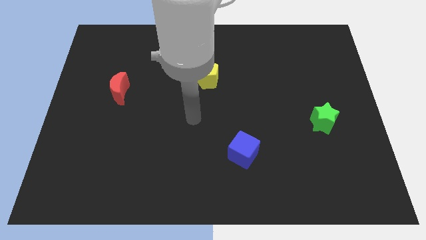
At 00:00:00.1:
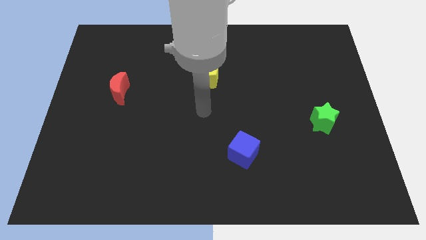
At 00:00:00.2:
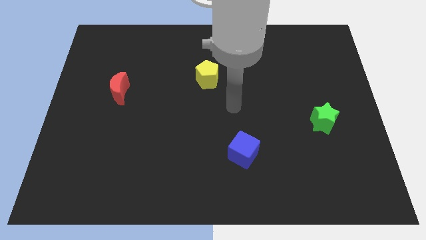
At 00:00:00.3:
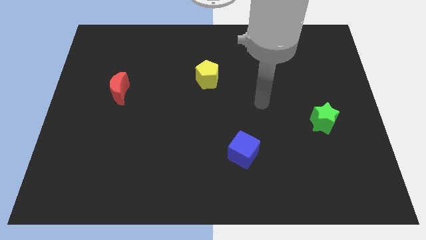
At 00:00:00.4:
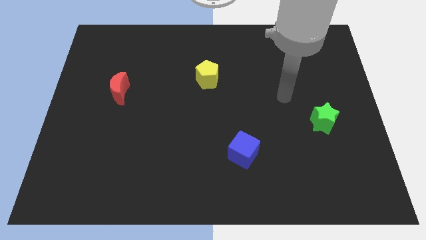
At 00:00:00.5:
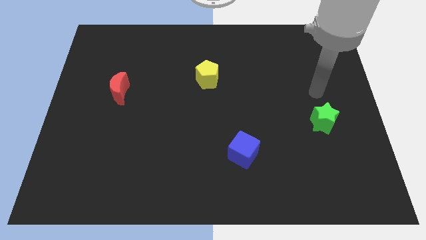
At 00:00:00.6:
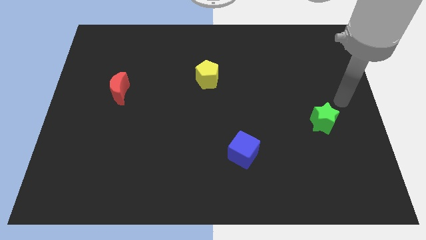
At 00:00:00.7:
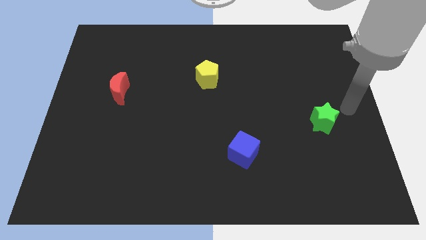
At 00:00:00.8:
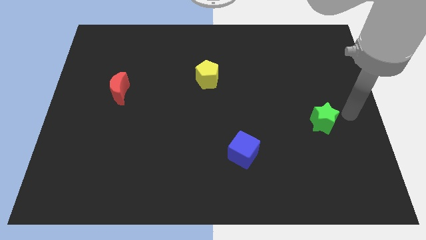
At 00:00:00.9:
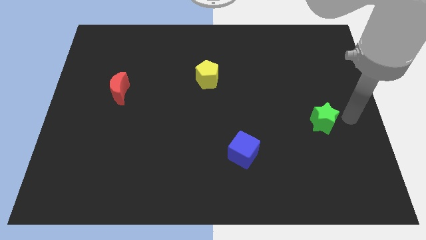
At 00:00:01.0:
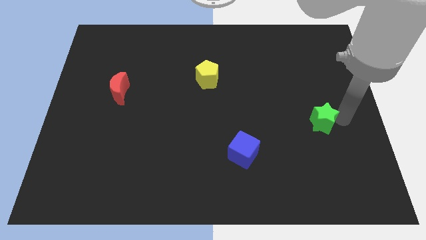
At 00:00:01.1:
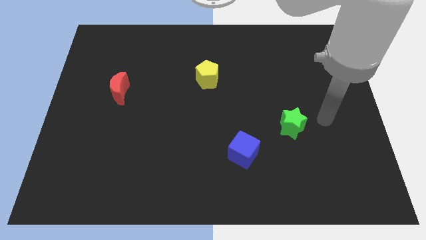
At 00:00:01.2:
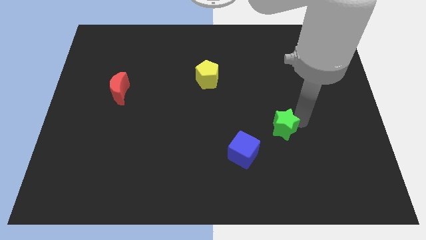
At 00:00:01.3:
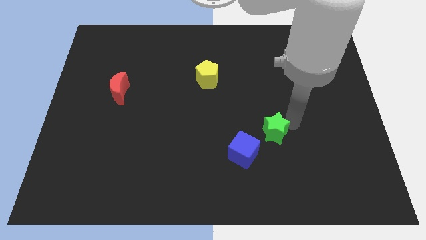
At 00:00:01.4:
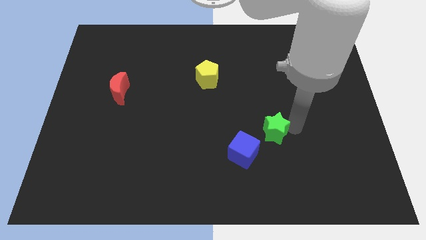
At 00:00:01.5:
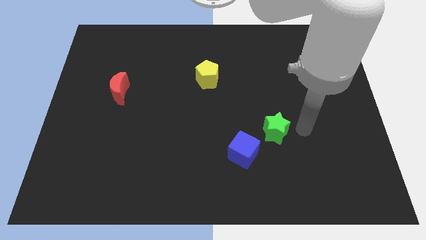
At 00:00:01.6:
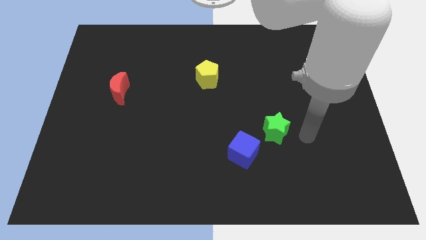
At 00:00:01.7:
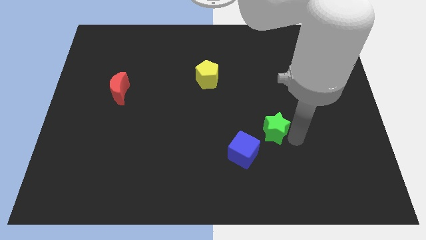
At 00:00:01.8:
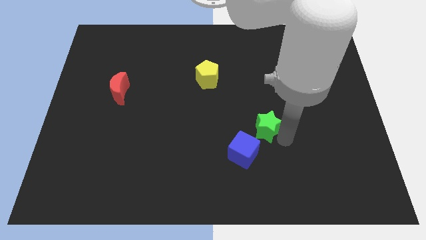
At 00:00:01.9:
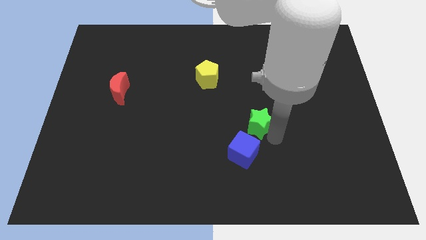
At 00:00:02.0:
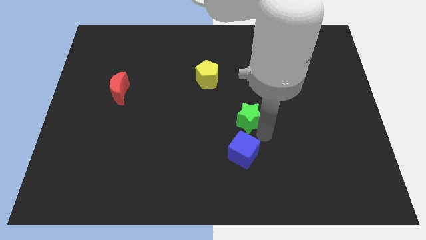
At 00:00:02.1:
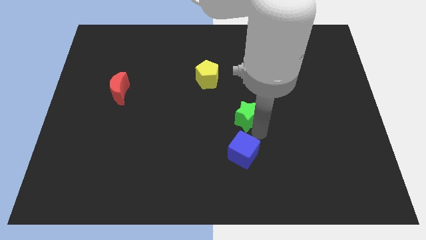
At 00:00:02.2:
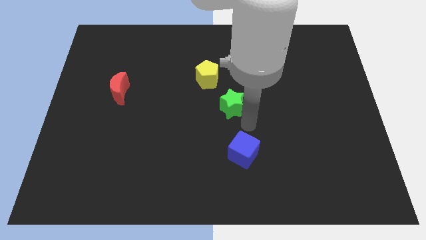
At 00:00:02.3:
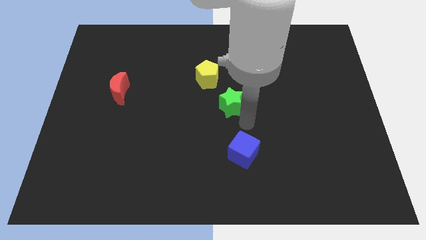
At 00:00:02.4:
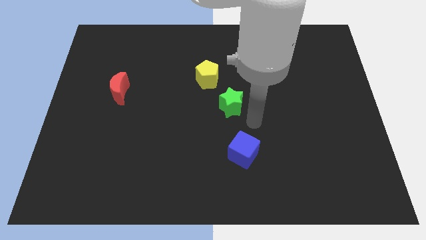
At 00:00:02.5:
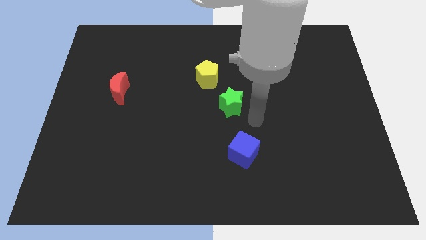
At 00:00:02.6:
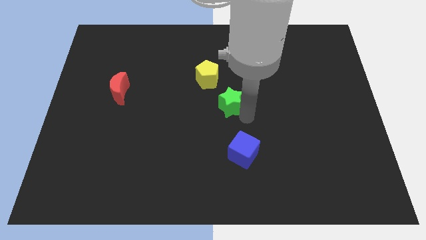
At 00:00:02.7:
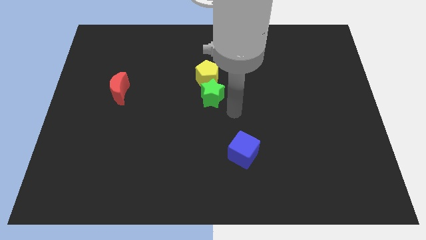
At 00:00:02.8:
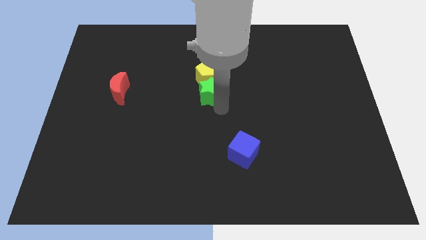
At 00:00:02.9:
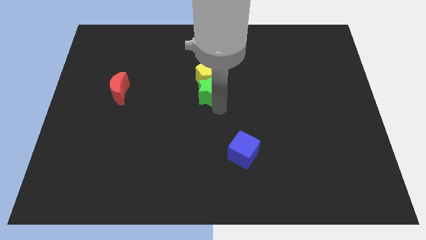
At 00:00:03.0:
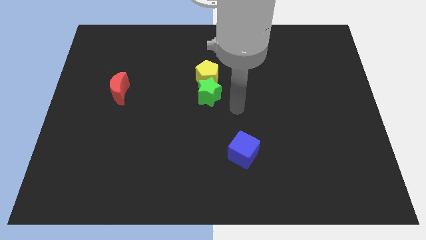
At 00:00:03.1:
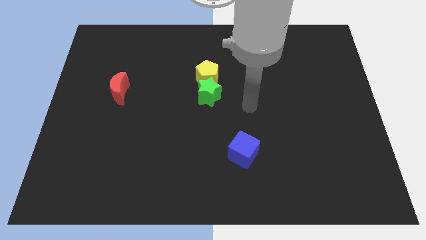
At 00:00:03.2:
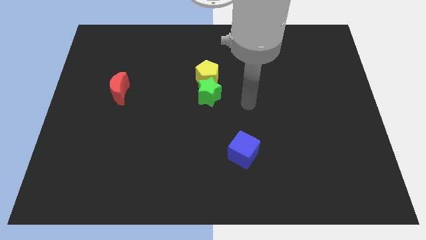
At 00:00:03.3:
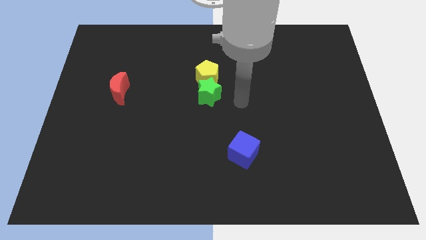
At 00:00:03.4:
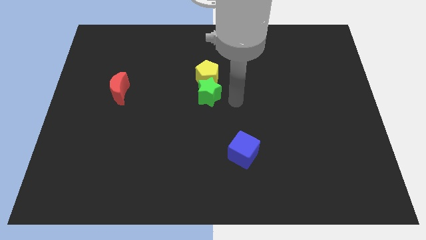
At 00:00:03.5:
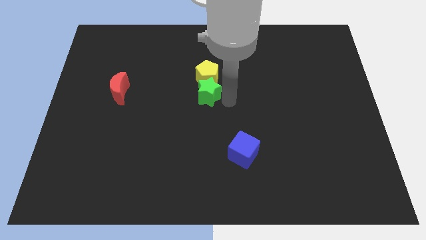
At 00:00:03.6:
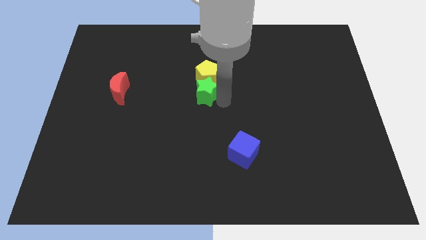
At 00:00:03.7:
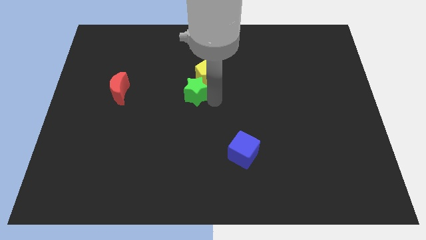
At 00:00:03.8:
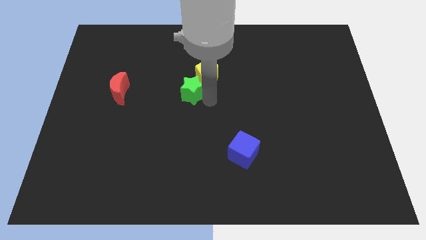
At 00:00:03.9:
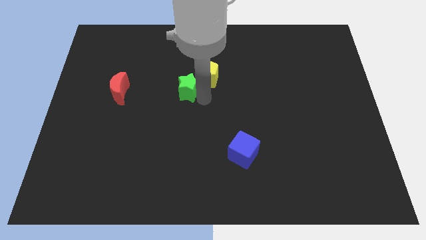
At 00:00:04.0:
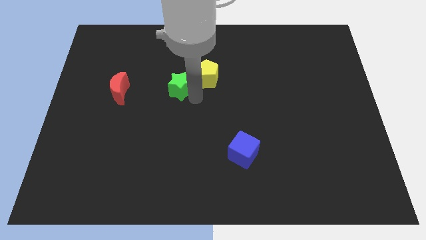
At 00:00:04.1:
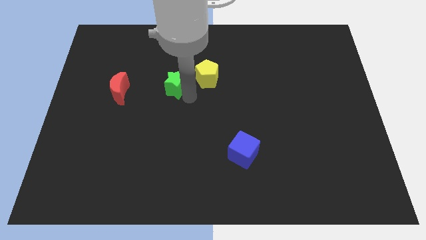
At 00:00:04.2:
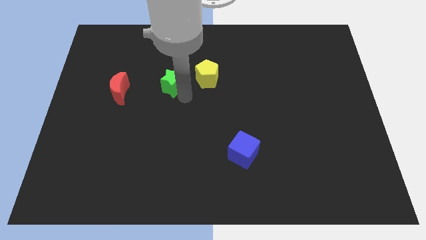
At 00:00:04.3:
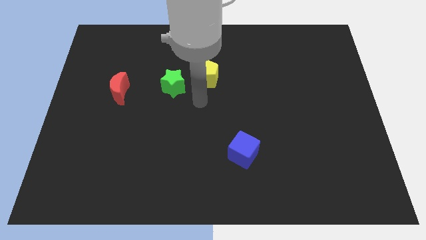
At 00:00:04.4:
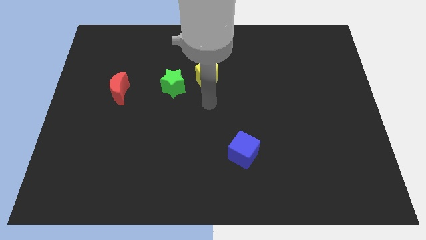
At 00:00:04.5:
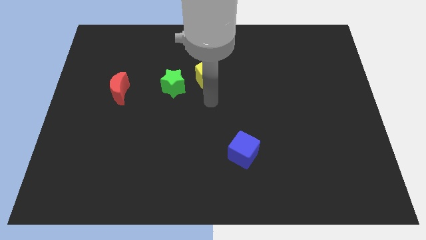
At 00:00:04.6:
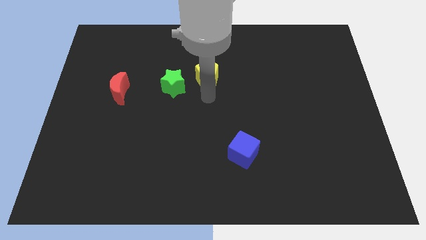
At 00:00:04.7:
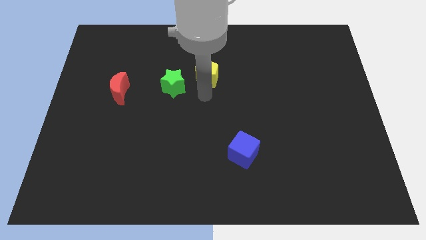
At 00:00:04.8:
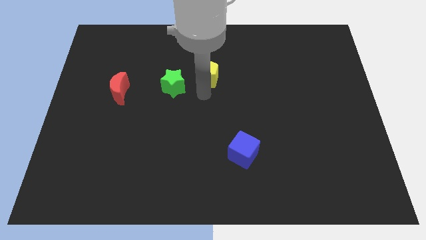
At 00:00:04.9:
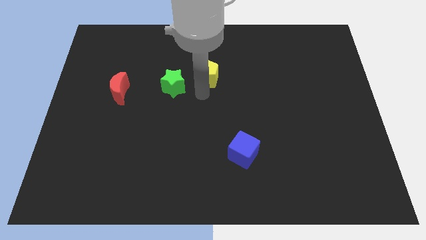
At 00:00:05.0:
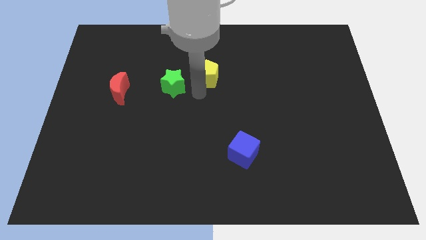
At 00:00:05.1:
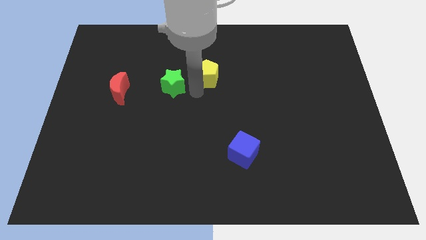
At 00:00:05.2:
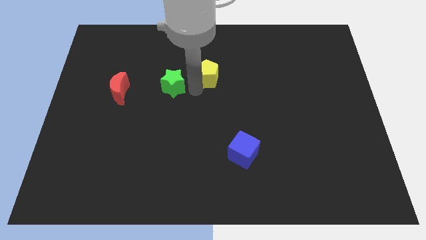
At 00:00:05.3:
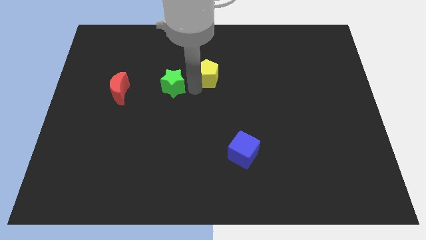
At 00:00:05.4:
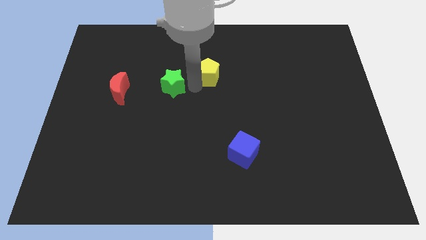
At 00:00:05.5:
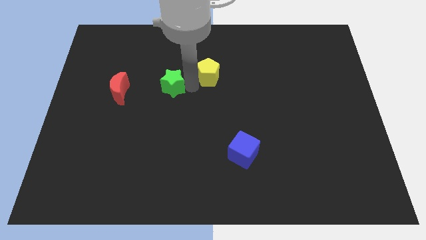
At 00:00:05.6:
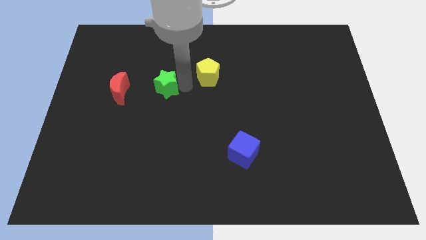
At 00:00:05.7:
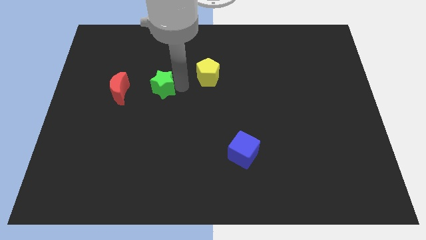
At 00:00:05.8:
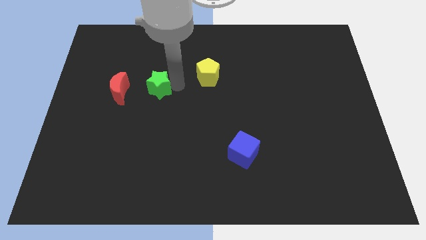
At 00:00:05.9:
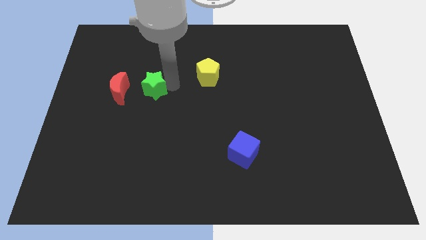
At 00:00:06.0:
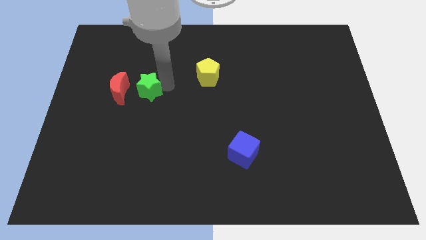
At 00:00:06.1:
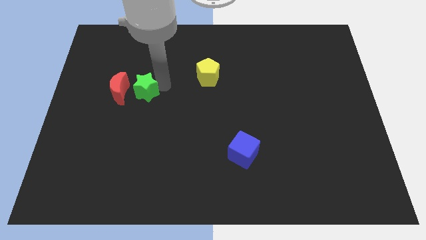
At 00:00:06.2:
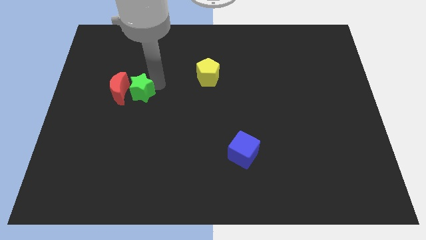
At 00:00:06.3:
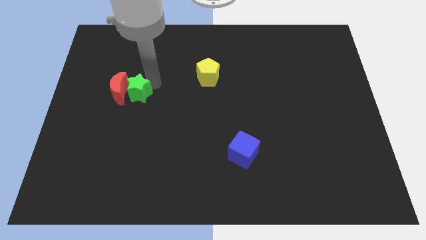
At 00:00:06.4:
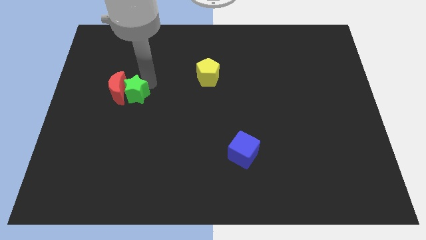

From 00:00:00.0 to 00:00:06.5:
slide the green block next to the red block

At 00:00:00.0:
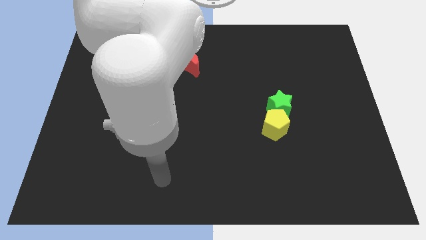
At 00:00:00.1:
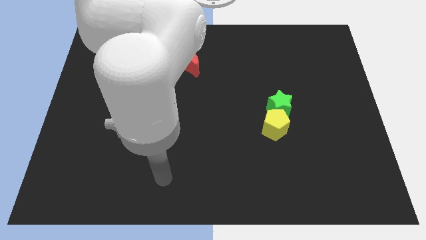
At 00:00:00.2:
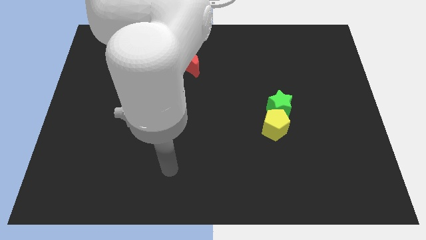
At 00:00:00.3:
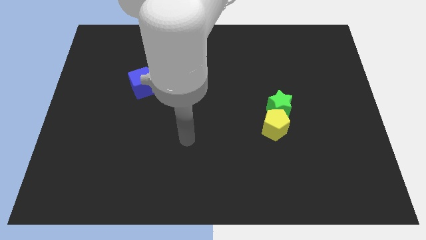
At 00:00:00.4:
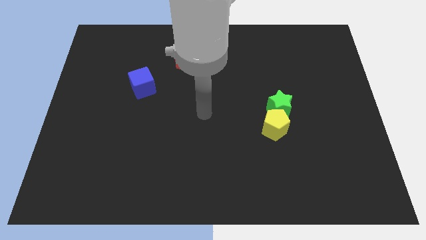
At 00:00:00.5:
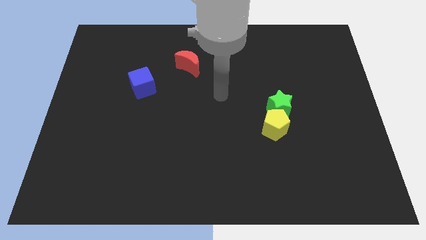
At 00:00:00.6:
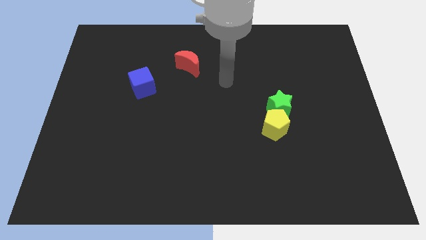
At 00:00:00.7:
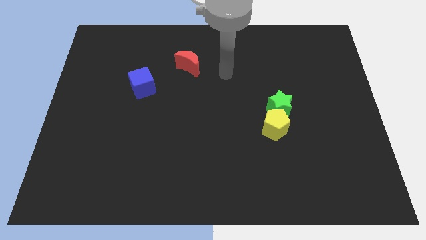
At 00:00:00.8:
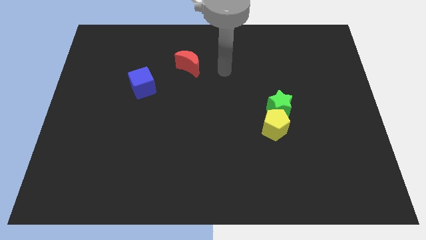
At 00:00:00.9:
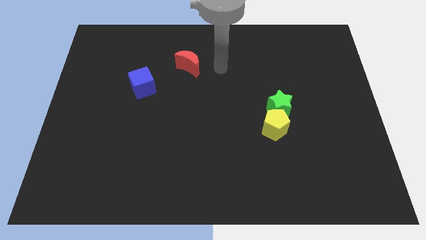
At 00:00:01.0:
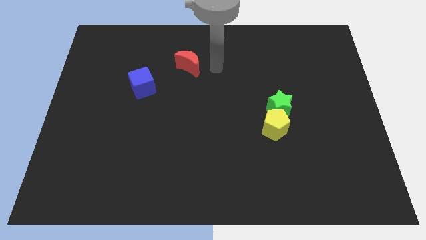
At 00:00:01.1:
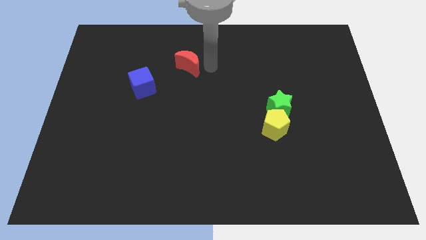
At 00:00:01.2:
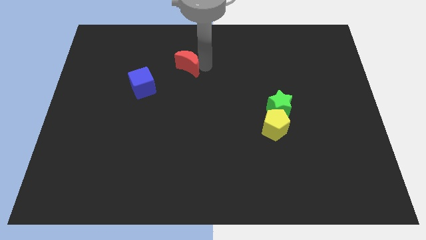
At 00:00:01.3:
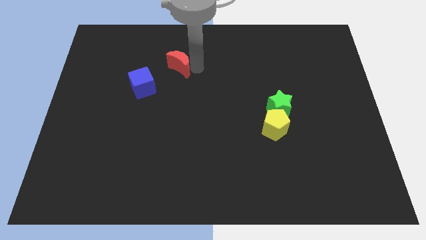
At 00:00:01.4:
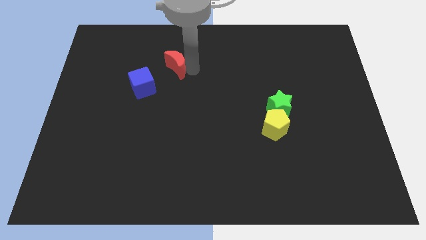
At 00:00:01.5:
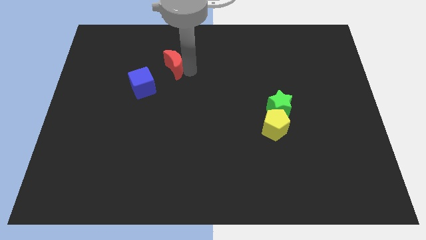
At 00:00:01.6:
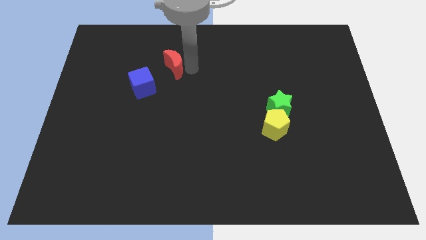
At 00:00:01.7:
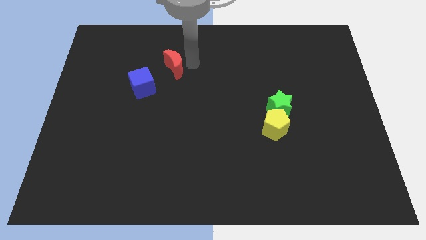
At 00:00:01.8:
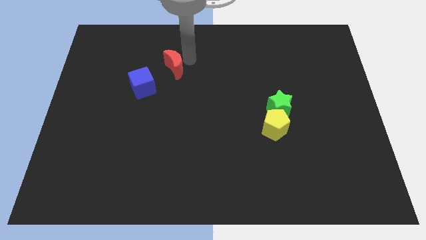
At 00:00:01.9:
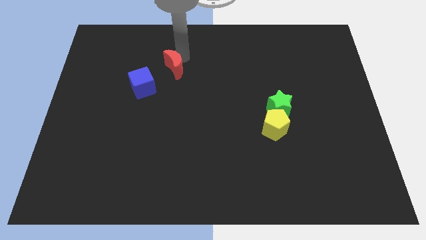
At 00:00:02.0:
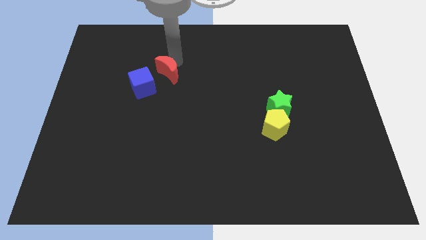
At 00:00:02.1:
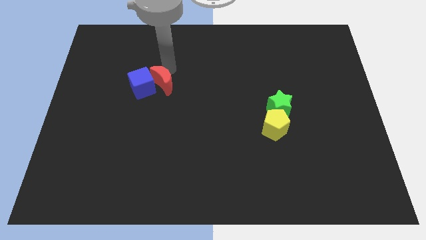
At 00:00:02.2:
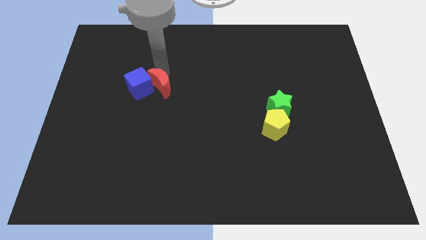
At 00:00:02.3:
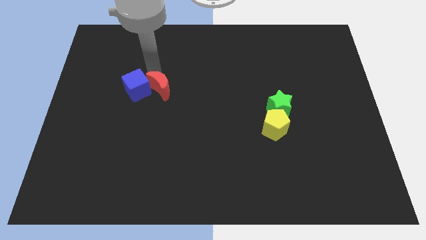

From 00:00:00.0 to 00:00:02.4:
move the red block close to the blue block
